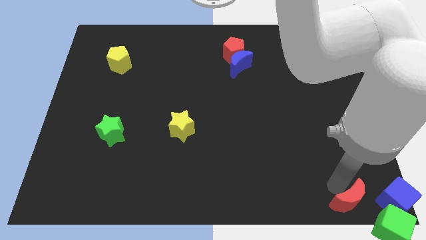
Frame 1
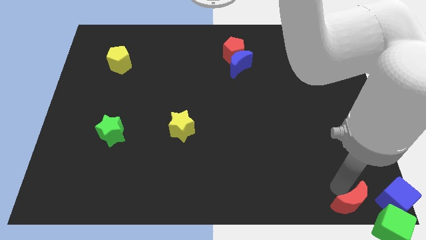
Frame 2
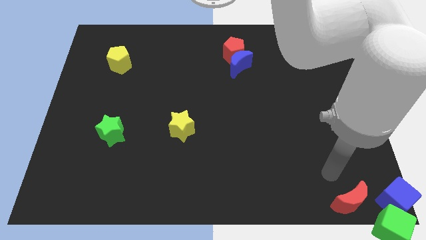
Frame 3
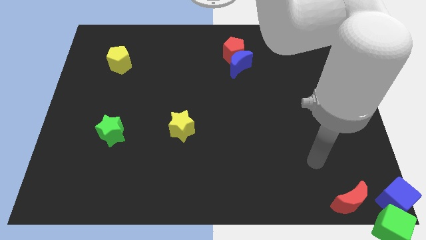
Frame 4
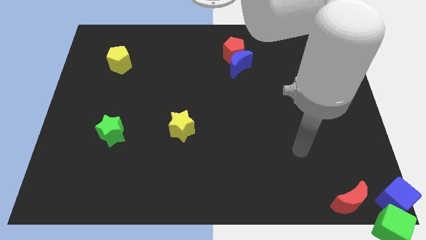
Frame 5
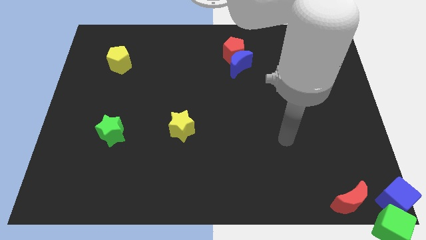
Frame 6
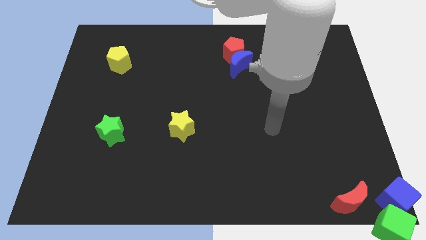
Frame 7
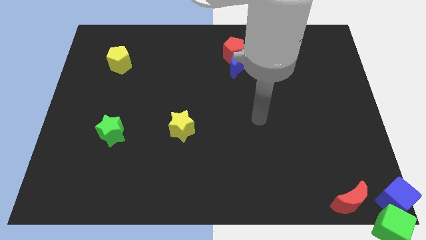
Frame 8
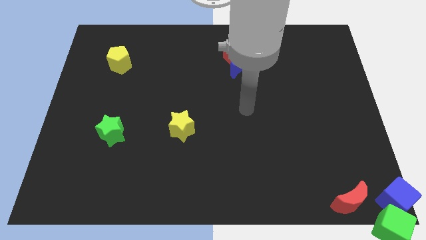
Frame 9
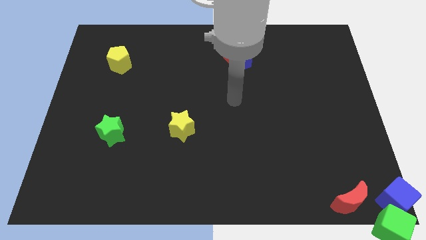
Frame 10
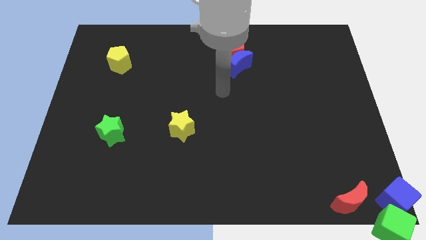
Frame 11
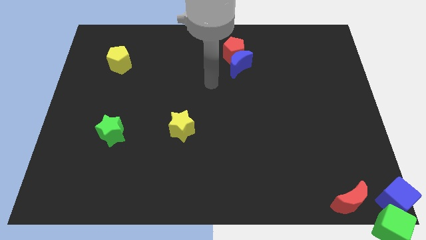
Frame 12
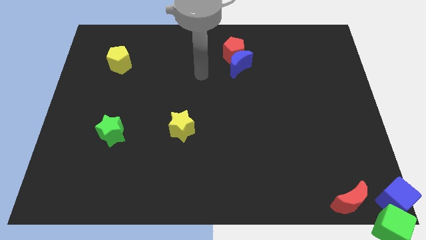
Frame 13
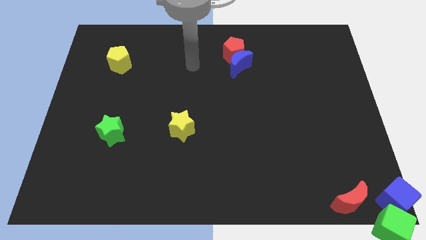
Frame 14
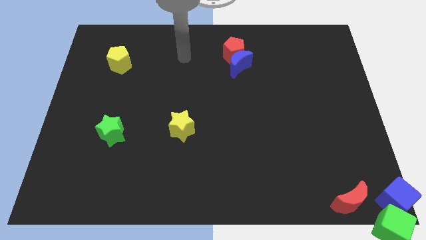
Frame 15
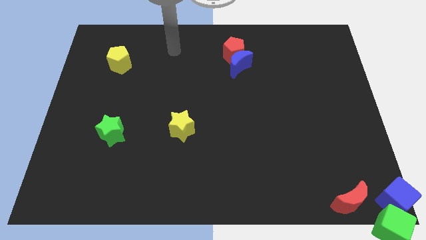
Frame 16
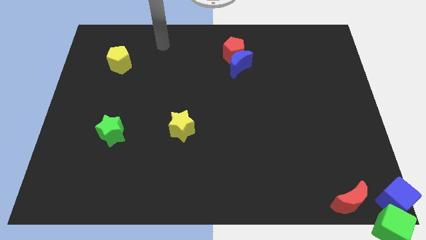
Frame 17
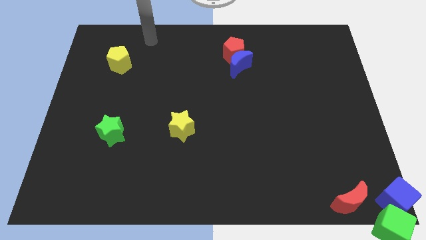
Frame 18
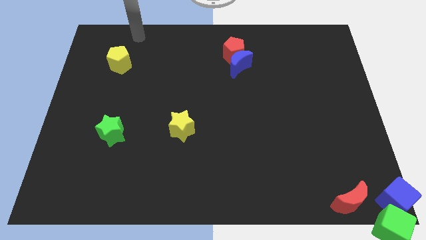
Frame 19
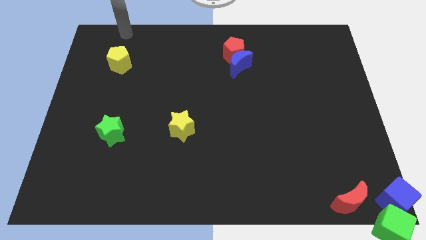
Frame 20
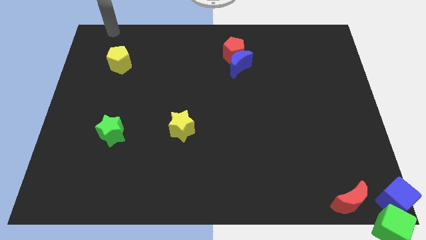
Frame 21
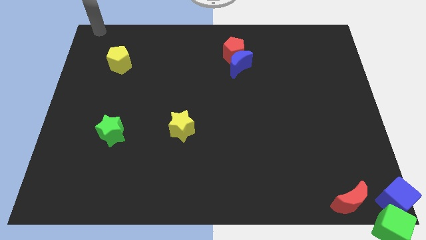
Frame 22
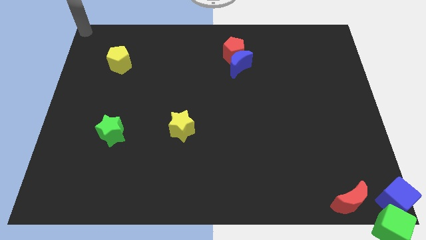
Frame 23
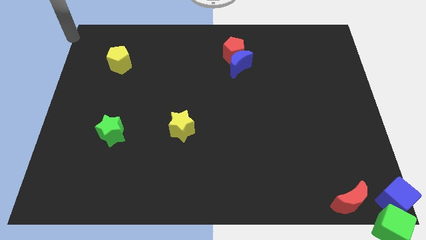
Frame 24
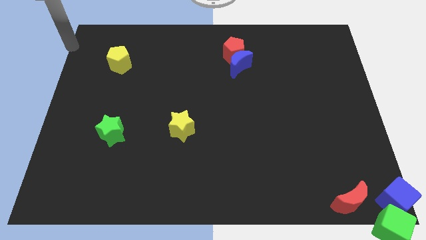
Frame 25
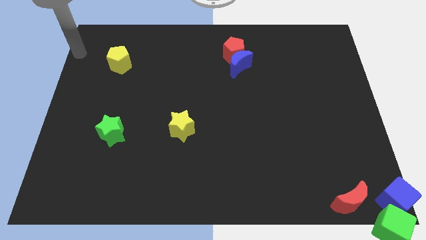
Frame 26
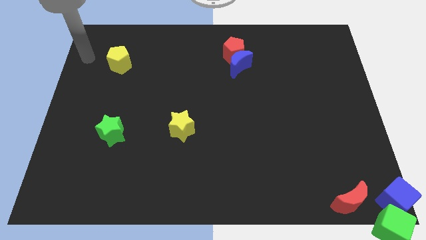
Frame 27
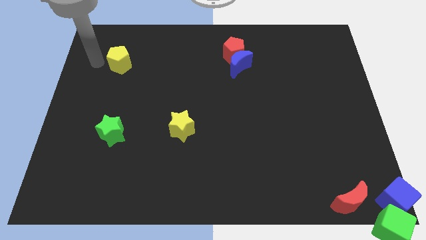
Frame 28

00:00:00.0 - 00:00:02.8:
move your arm away from the red moon

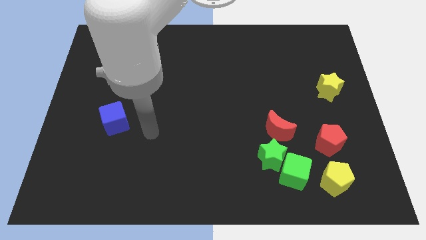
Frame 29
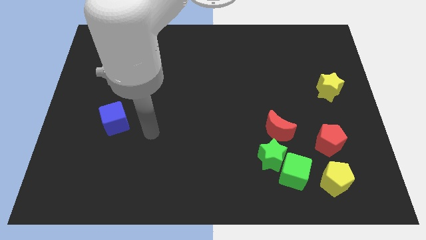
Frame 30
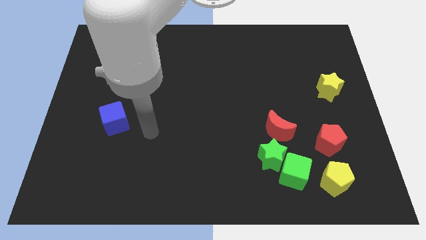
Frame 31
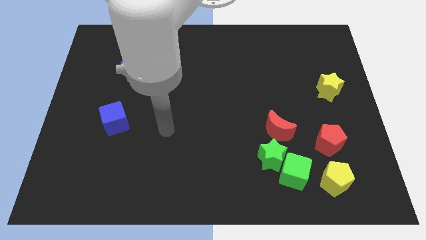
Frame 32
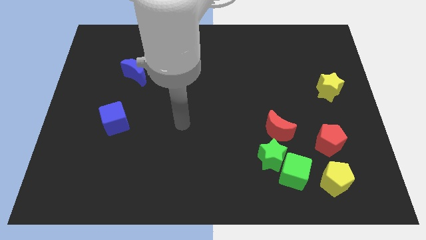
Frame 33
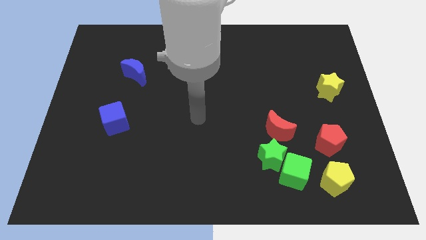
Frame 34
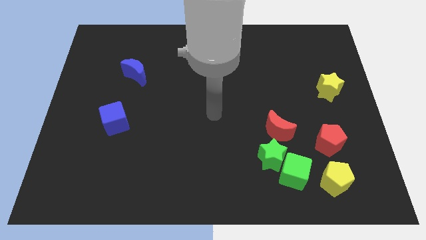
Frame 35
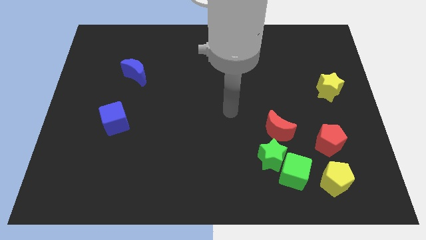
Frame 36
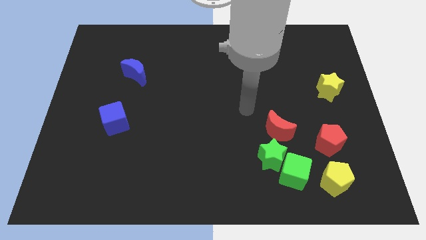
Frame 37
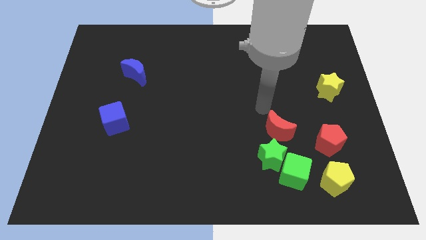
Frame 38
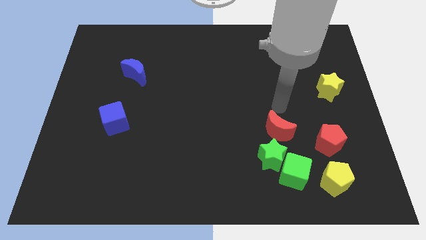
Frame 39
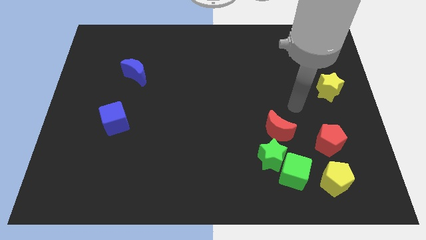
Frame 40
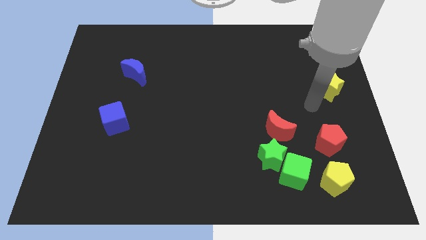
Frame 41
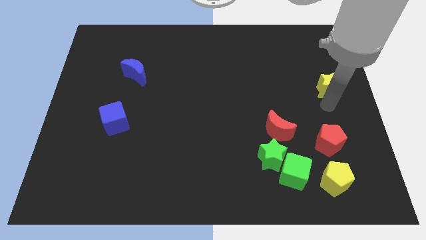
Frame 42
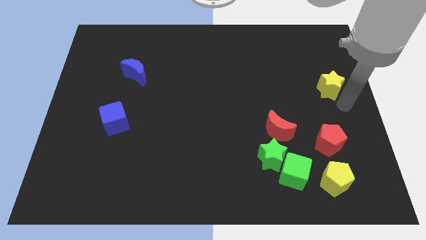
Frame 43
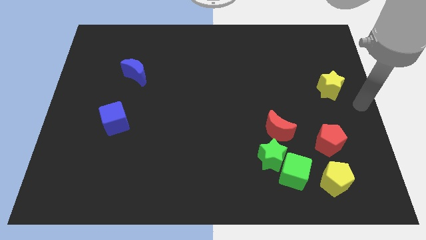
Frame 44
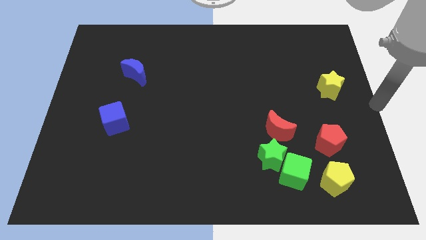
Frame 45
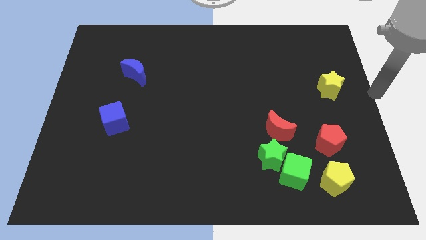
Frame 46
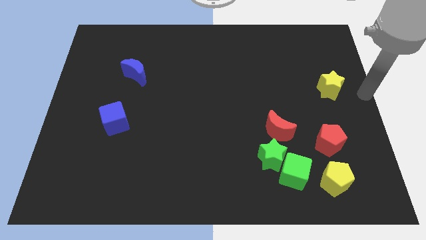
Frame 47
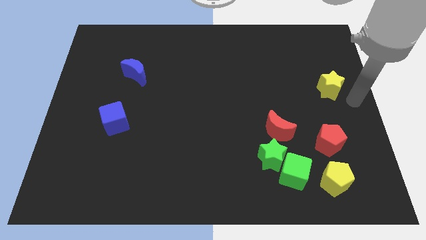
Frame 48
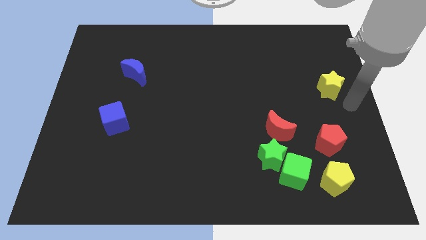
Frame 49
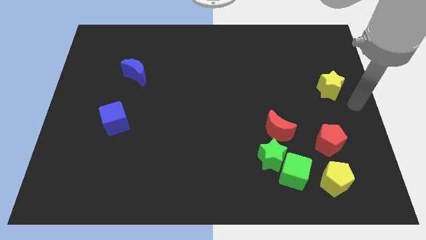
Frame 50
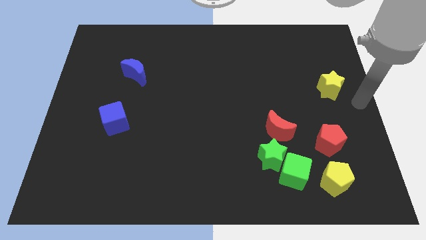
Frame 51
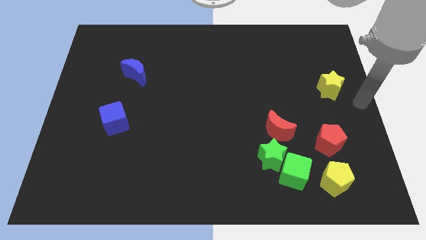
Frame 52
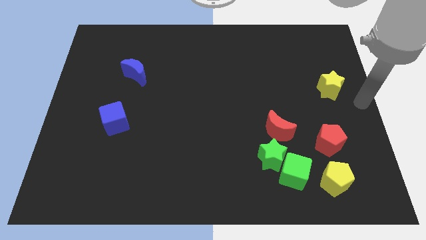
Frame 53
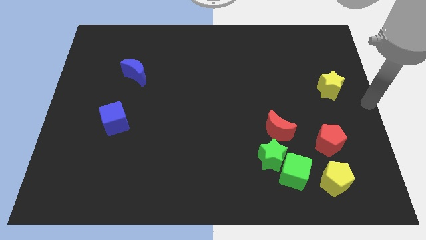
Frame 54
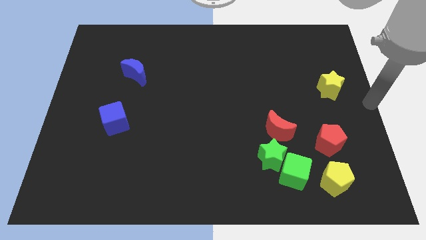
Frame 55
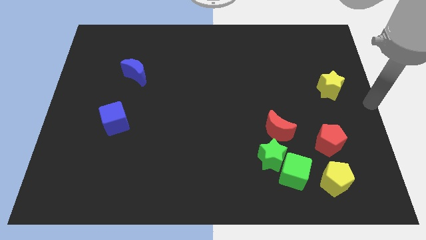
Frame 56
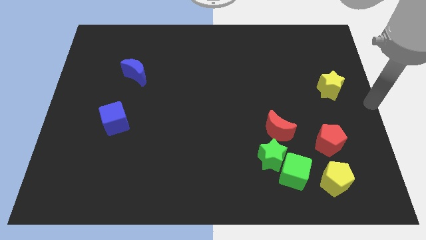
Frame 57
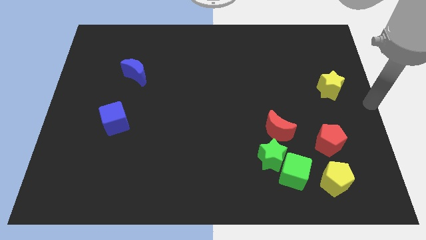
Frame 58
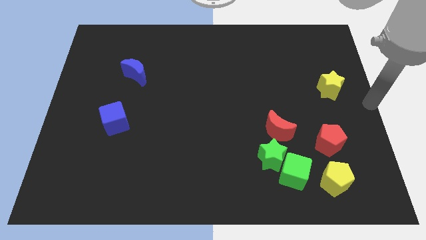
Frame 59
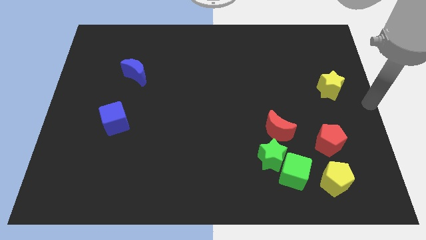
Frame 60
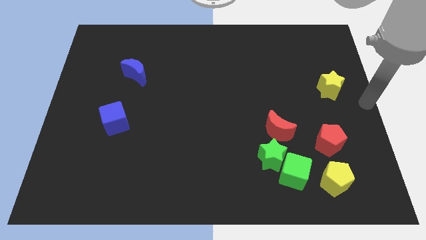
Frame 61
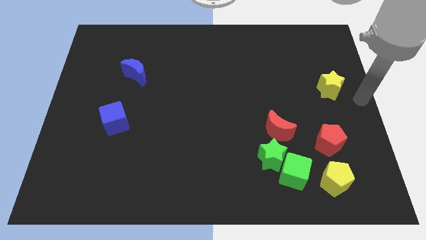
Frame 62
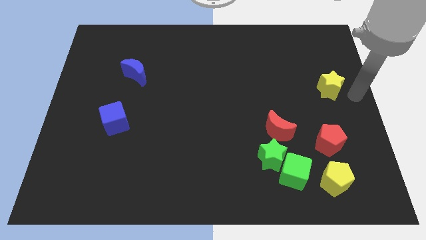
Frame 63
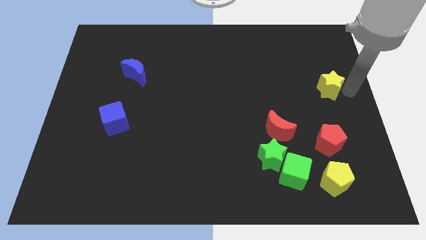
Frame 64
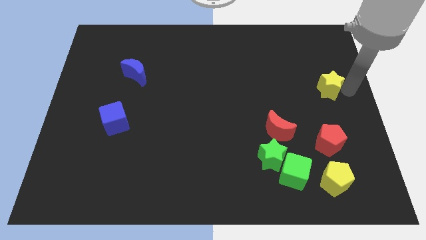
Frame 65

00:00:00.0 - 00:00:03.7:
place your arm to the bottom of the yellow star

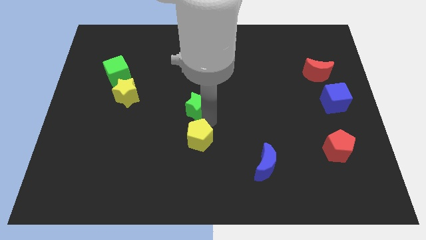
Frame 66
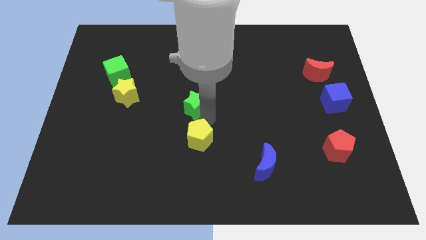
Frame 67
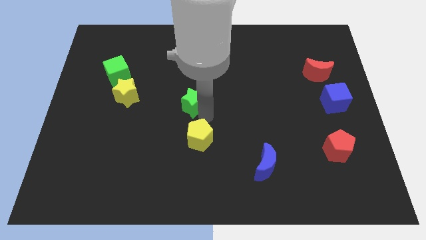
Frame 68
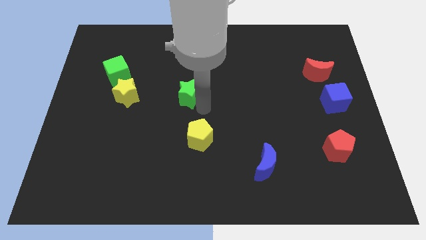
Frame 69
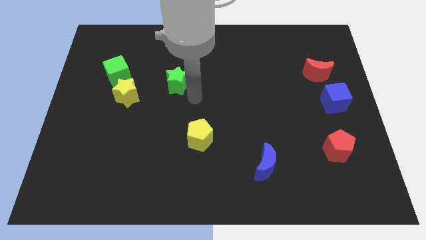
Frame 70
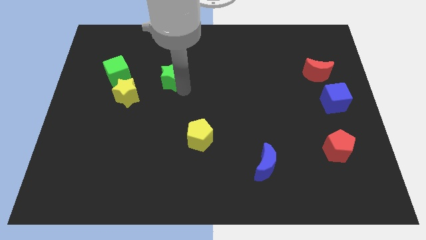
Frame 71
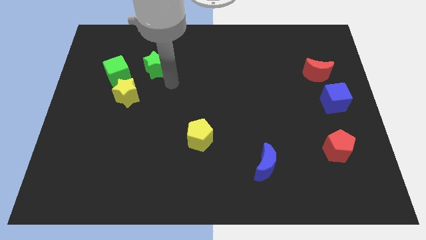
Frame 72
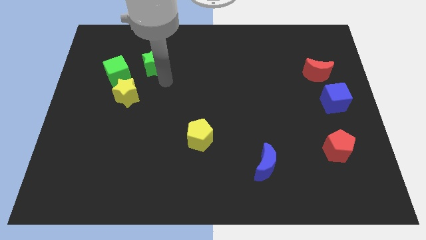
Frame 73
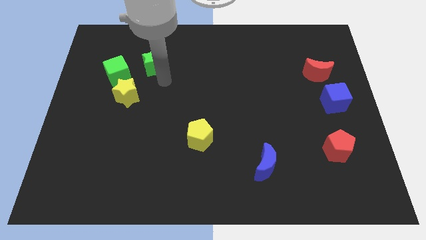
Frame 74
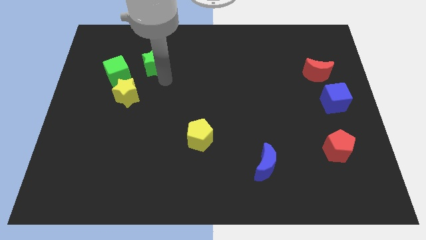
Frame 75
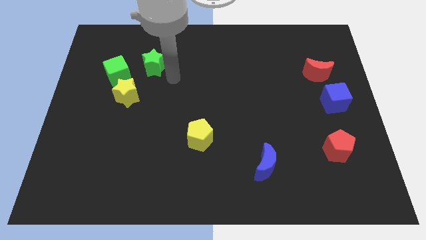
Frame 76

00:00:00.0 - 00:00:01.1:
push the green star diagonal to the right of the green cube

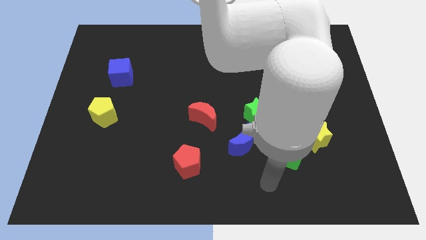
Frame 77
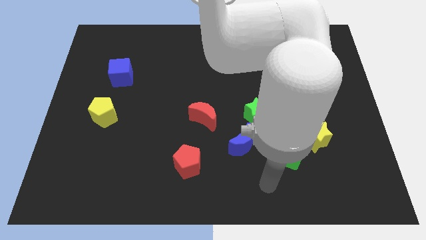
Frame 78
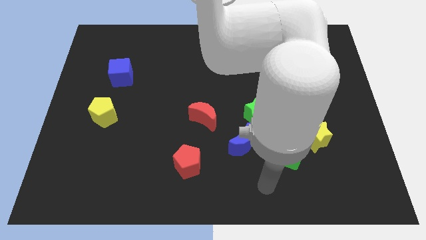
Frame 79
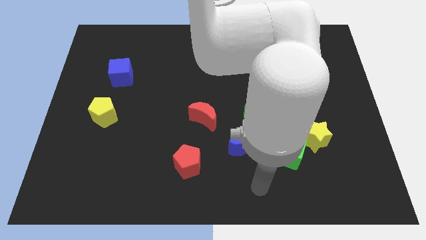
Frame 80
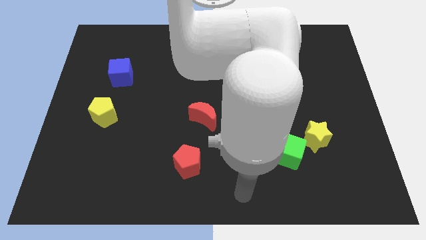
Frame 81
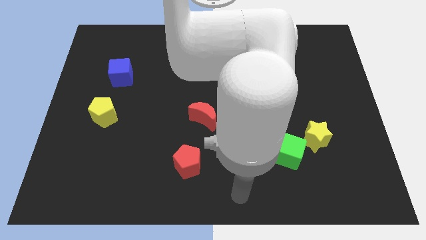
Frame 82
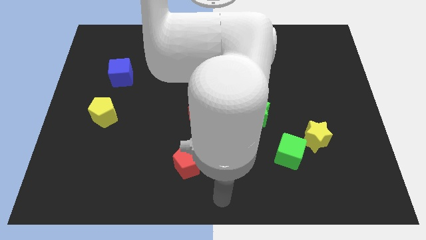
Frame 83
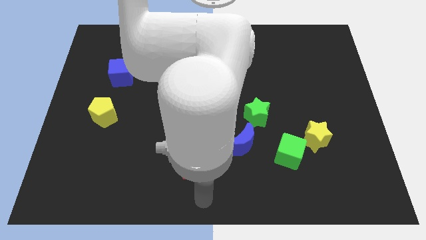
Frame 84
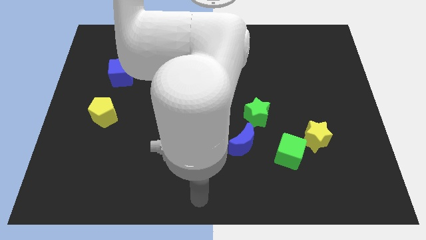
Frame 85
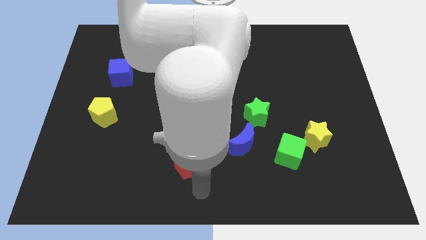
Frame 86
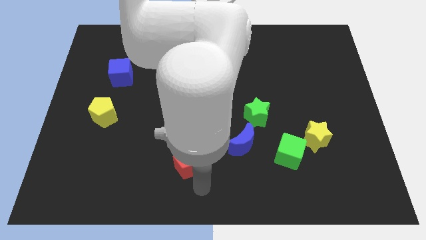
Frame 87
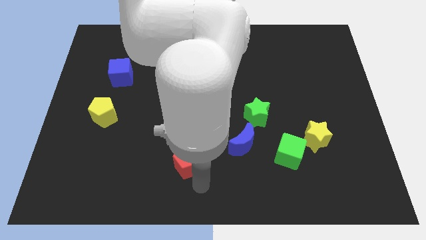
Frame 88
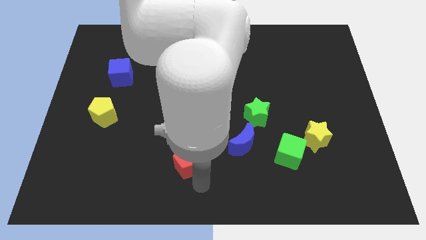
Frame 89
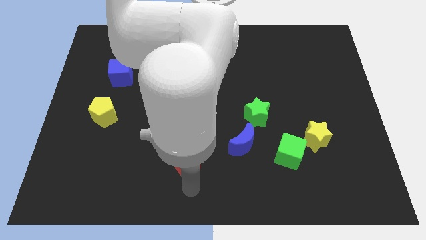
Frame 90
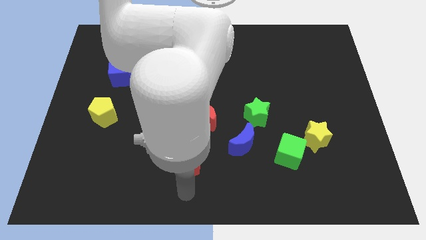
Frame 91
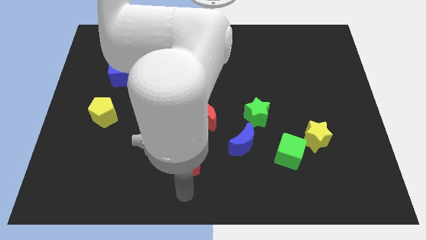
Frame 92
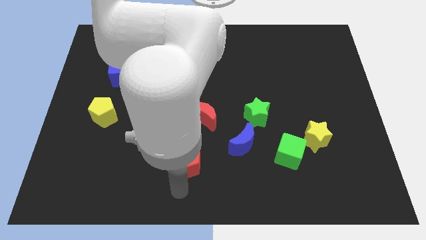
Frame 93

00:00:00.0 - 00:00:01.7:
move your arm below the red pentagon
